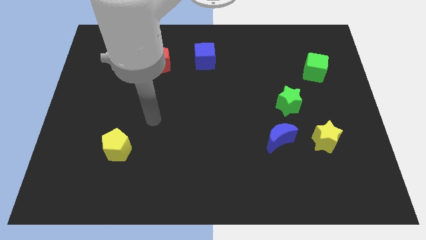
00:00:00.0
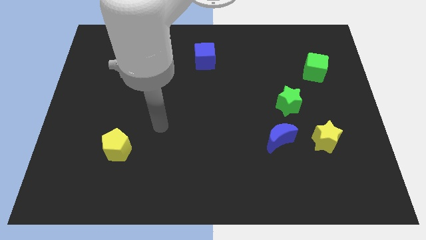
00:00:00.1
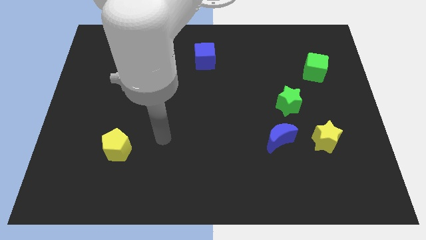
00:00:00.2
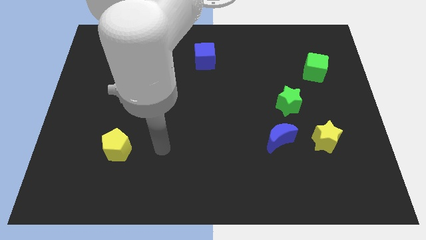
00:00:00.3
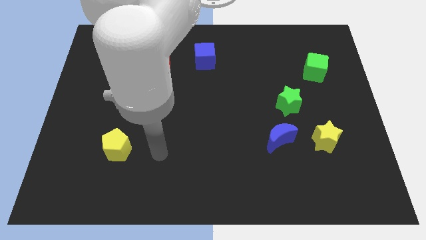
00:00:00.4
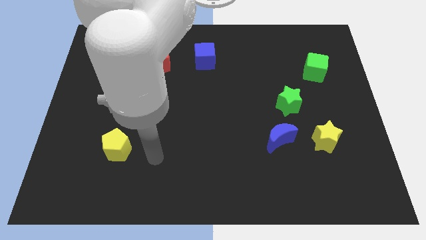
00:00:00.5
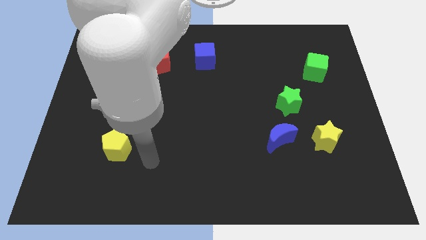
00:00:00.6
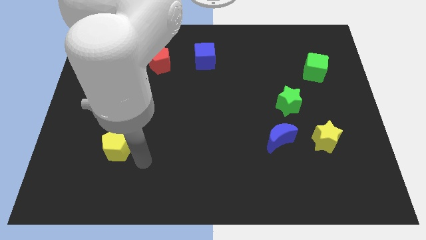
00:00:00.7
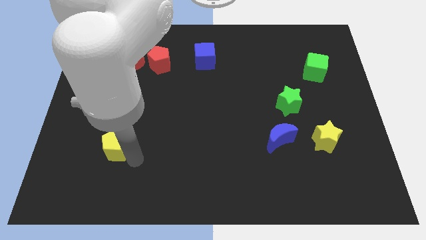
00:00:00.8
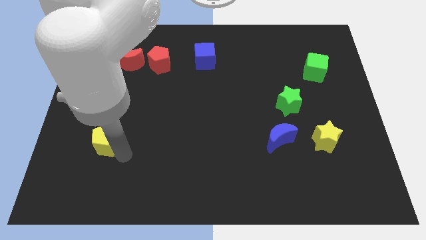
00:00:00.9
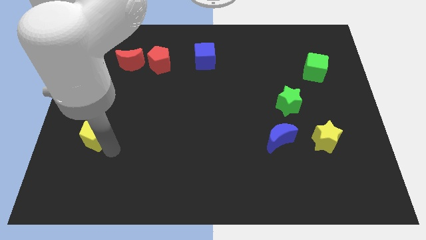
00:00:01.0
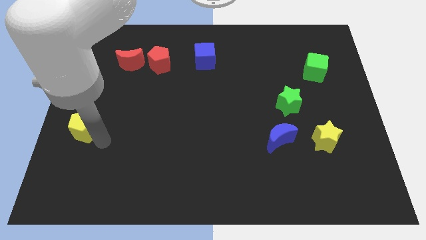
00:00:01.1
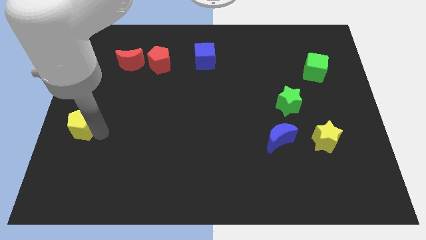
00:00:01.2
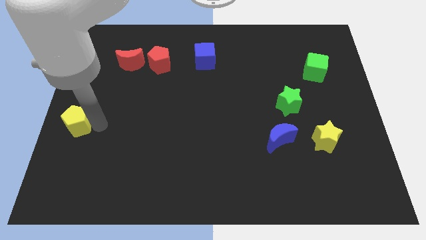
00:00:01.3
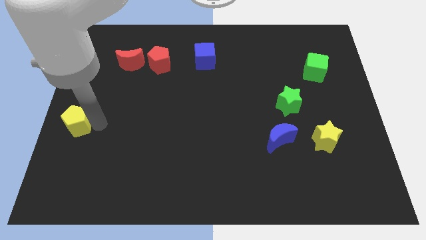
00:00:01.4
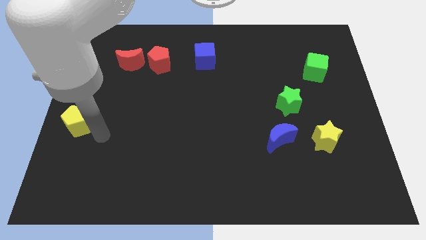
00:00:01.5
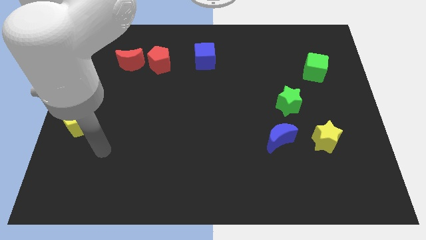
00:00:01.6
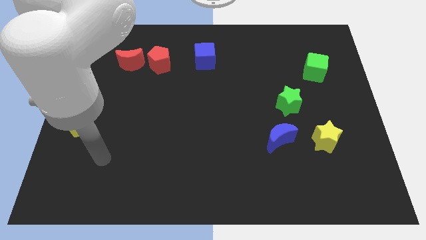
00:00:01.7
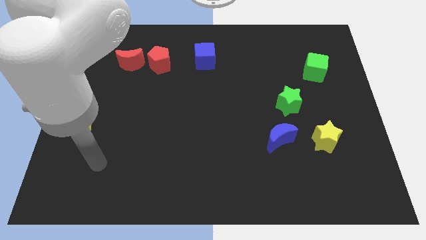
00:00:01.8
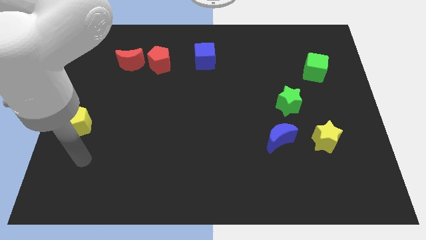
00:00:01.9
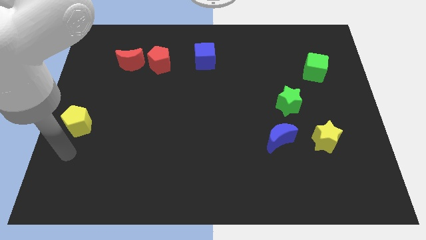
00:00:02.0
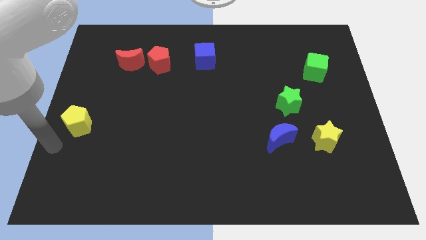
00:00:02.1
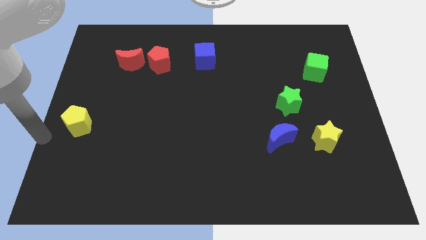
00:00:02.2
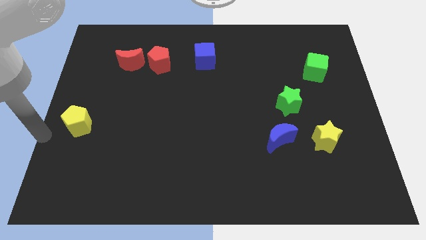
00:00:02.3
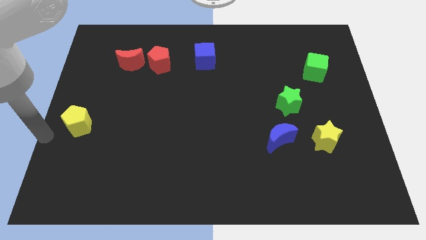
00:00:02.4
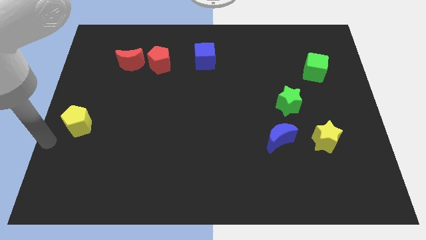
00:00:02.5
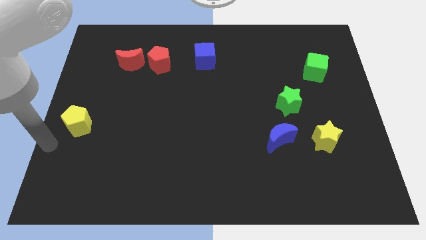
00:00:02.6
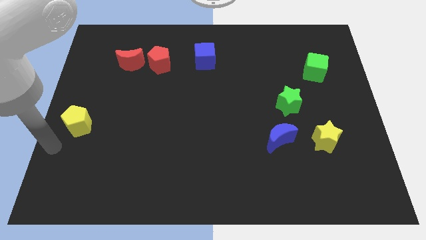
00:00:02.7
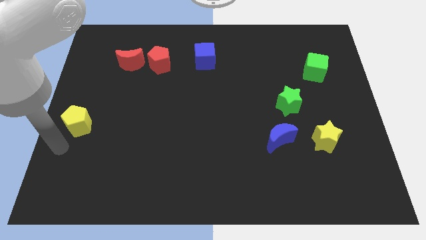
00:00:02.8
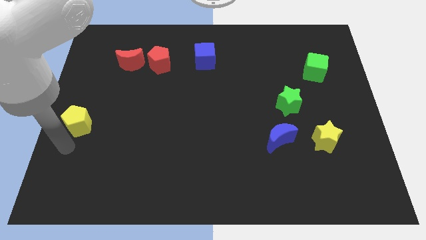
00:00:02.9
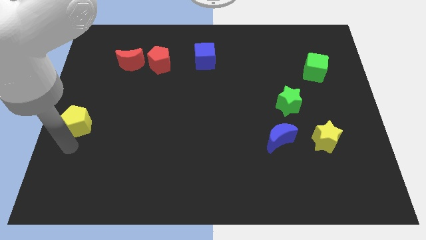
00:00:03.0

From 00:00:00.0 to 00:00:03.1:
slide yellow pentagon towards center left

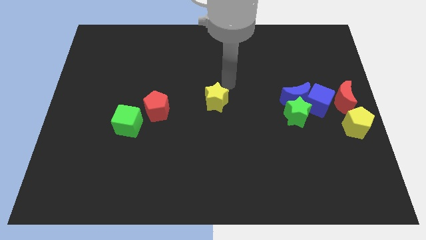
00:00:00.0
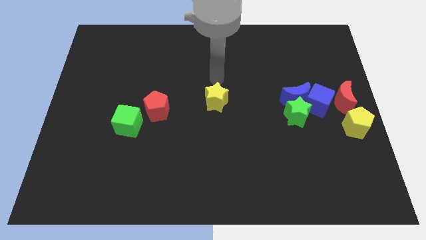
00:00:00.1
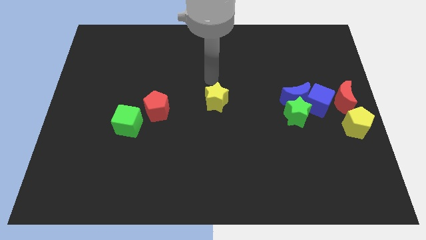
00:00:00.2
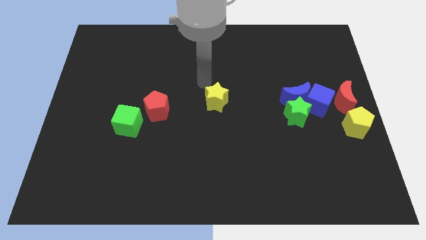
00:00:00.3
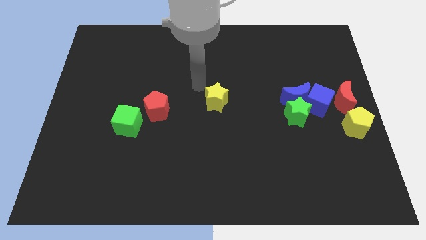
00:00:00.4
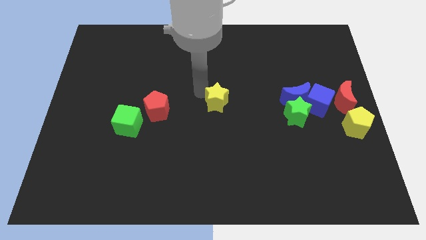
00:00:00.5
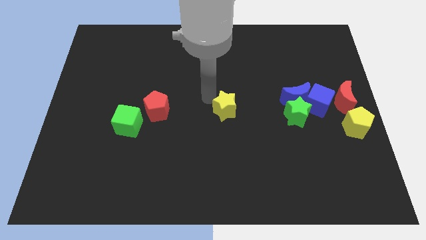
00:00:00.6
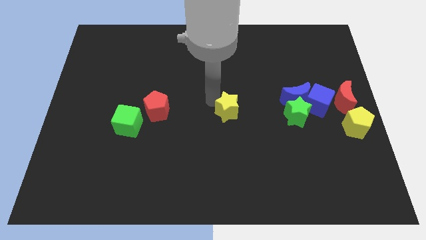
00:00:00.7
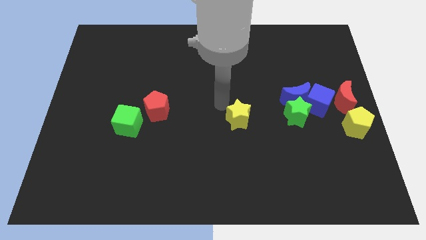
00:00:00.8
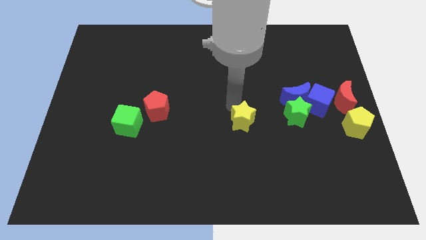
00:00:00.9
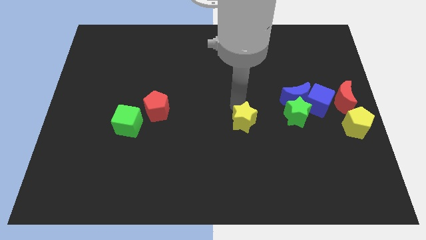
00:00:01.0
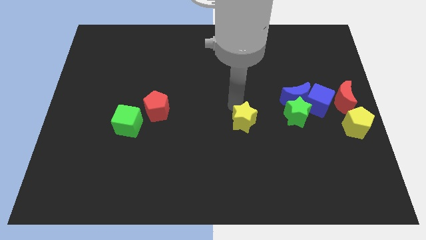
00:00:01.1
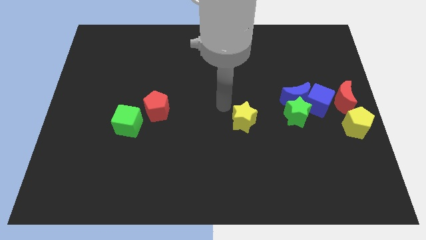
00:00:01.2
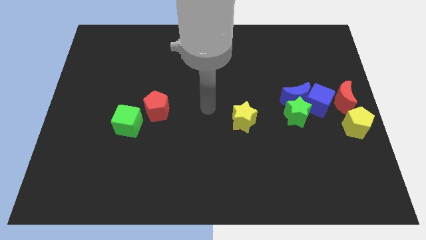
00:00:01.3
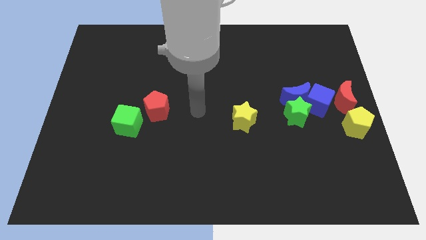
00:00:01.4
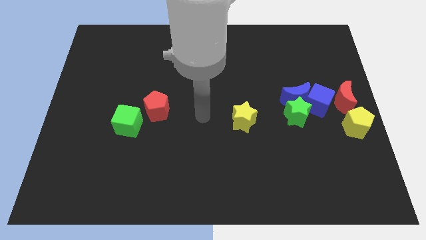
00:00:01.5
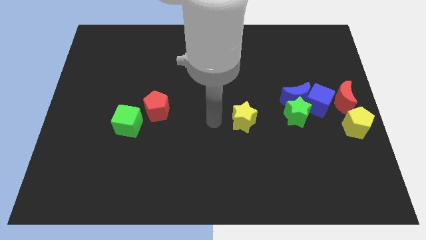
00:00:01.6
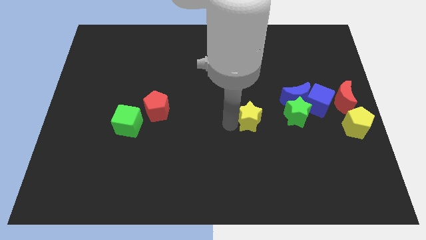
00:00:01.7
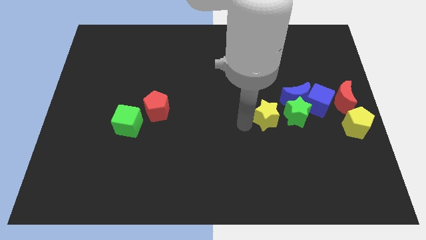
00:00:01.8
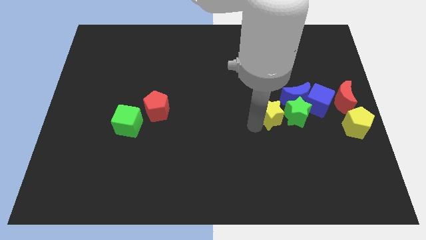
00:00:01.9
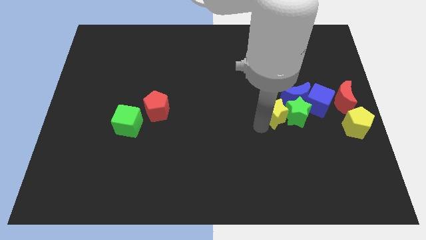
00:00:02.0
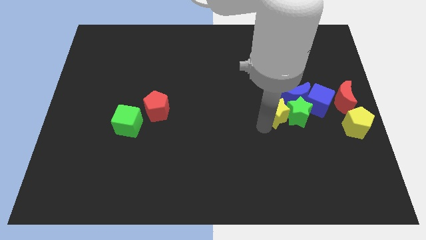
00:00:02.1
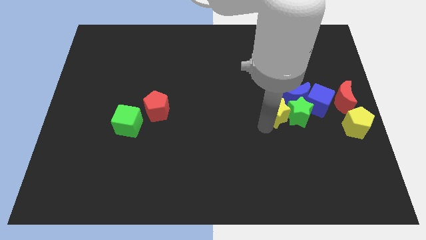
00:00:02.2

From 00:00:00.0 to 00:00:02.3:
move the yellow star into the green star to the right

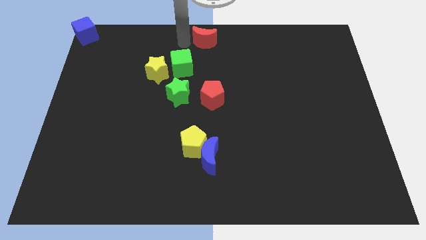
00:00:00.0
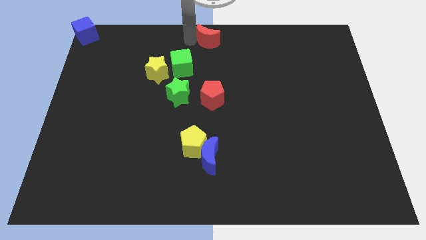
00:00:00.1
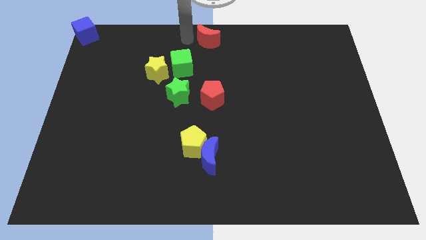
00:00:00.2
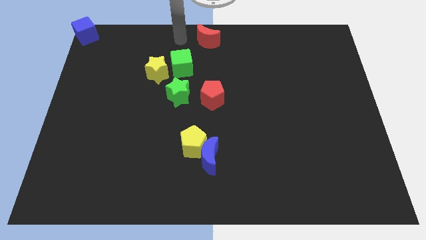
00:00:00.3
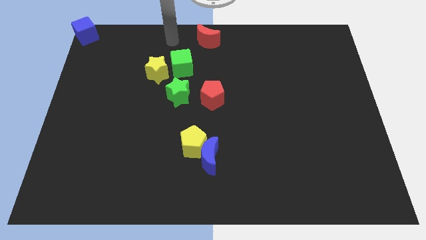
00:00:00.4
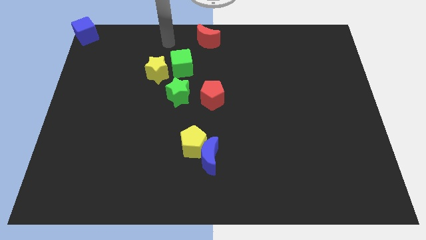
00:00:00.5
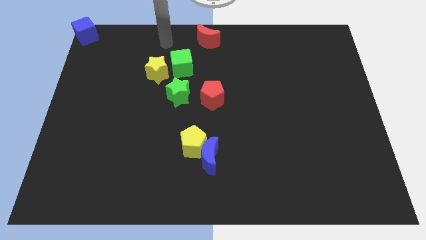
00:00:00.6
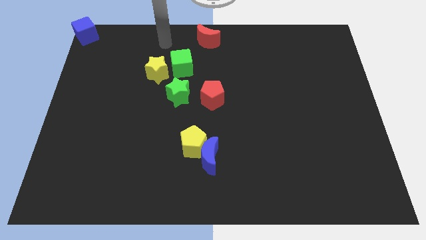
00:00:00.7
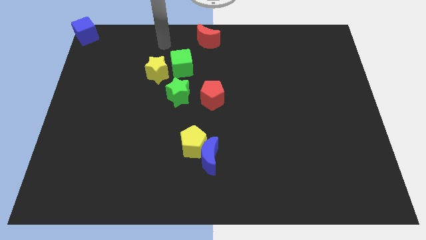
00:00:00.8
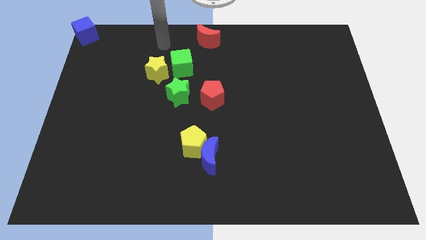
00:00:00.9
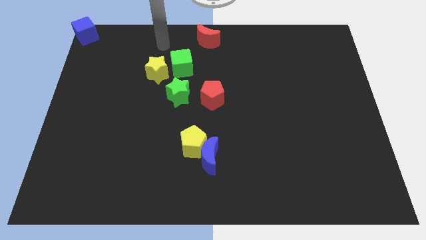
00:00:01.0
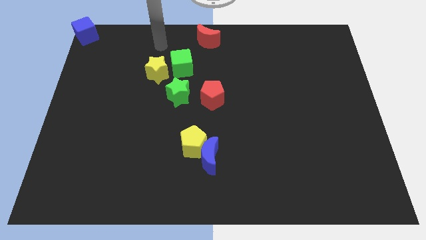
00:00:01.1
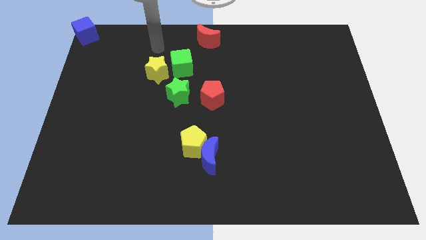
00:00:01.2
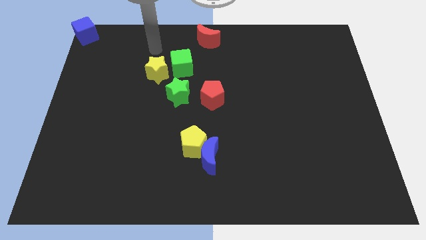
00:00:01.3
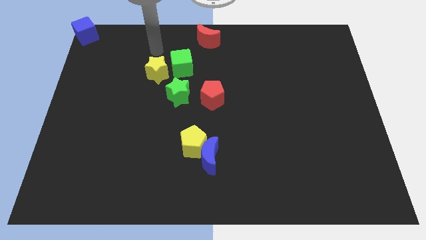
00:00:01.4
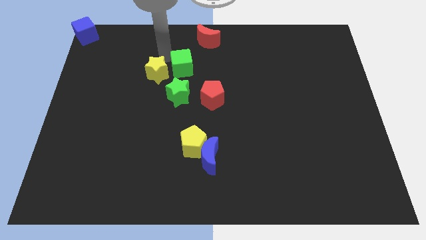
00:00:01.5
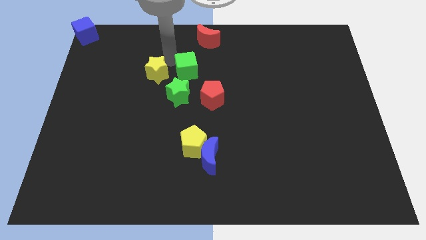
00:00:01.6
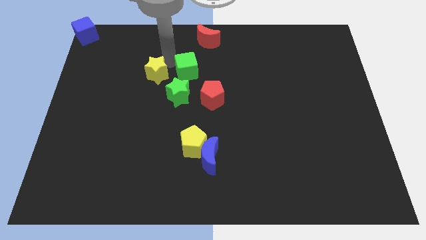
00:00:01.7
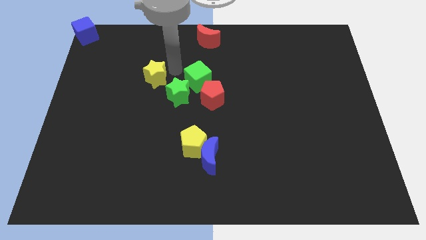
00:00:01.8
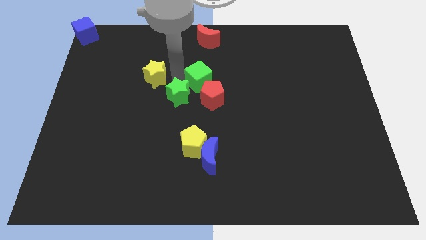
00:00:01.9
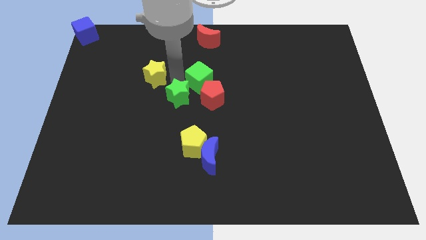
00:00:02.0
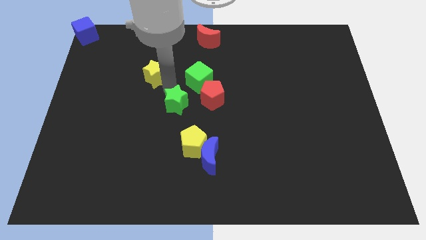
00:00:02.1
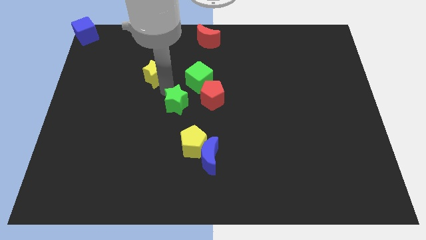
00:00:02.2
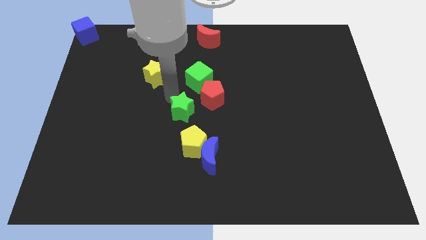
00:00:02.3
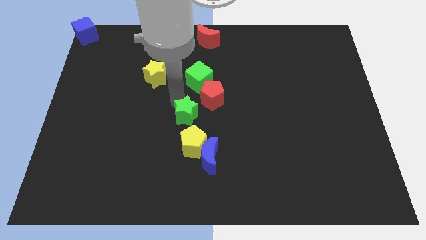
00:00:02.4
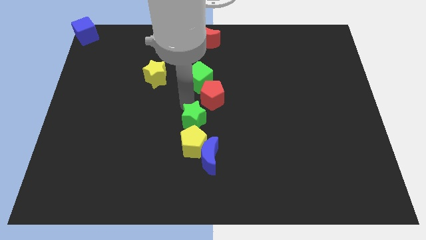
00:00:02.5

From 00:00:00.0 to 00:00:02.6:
place the green star above the yellow pentagon

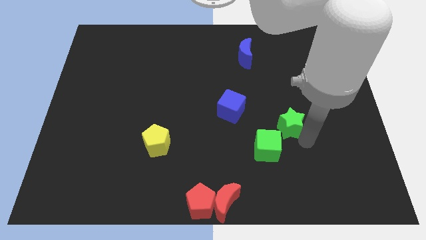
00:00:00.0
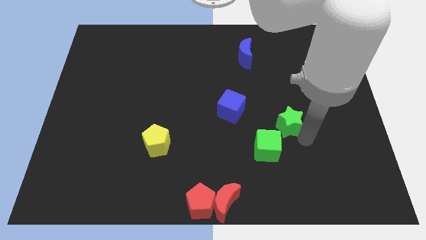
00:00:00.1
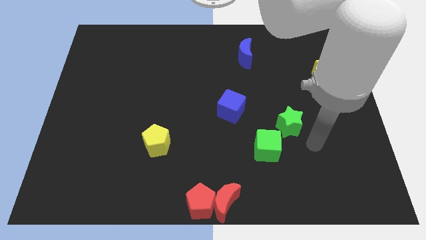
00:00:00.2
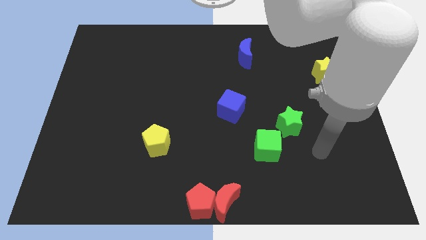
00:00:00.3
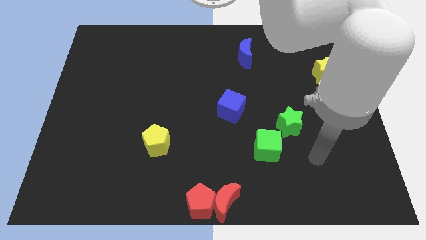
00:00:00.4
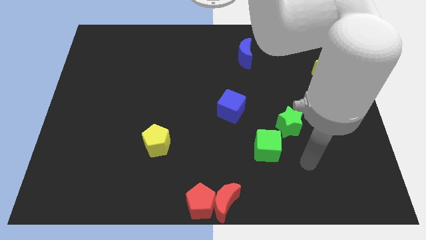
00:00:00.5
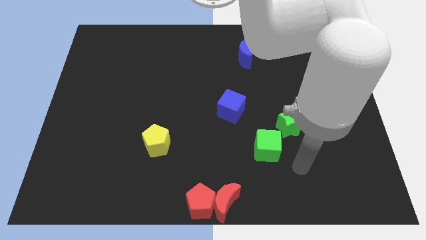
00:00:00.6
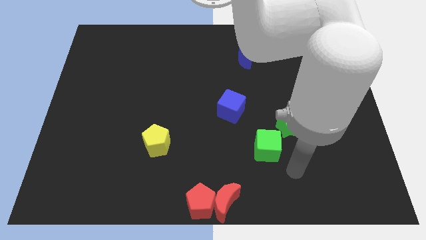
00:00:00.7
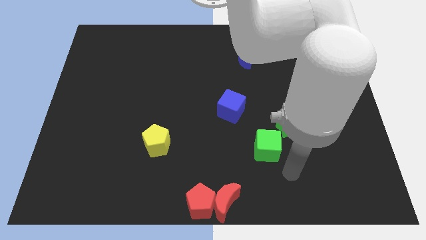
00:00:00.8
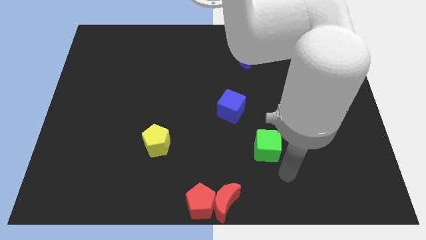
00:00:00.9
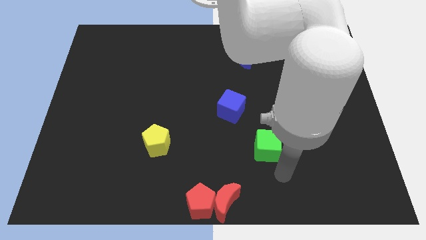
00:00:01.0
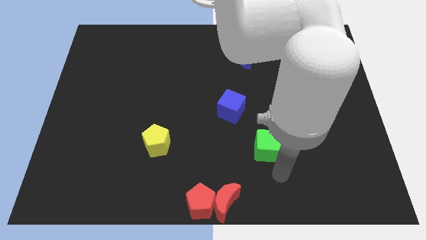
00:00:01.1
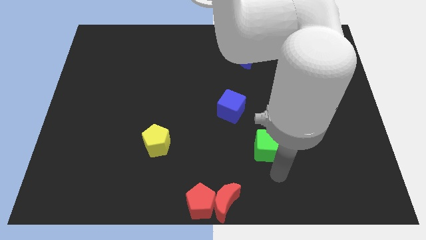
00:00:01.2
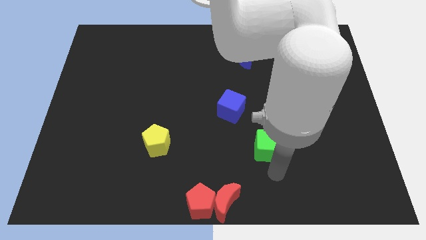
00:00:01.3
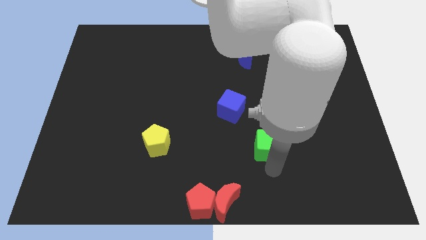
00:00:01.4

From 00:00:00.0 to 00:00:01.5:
touch the bottom side of green cube
